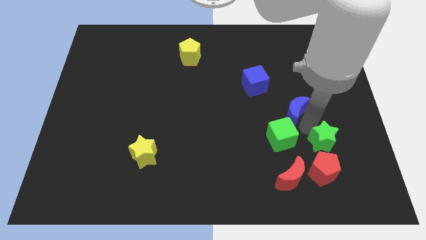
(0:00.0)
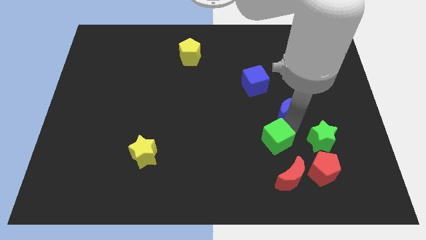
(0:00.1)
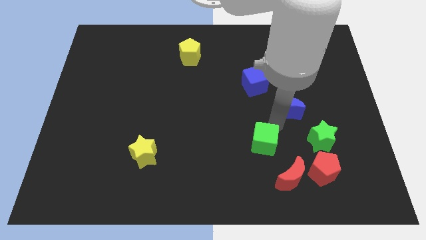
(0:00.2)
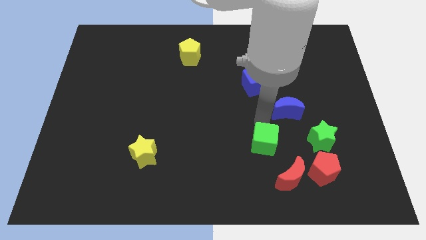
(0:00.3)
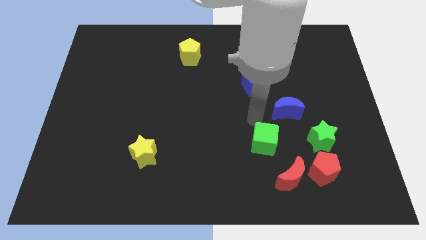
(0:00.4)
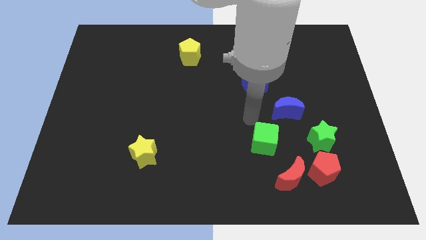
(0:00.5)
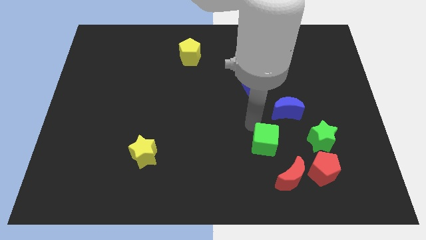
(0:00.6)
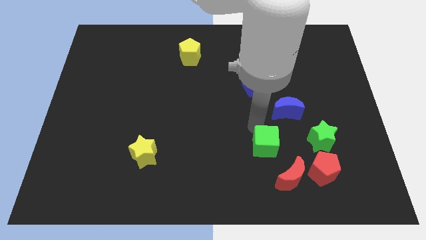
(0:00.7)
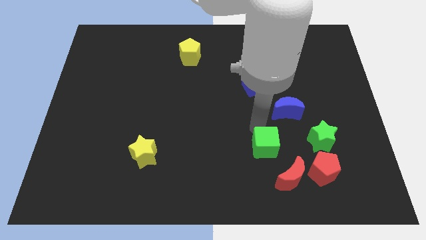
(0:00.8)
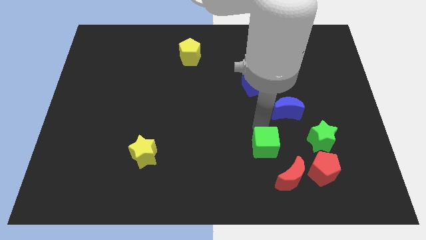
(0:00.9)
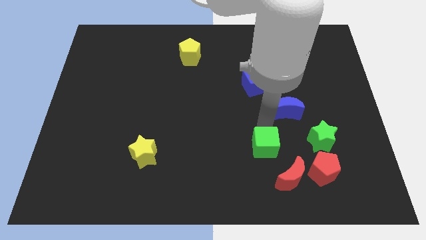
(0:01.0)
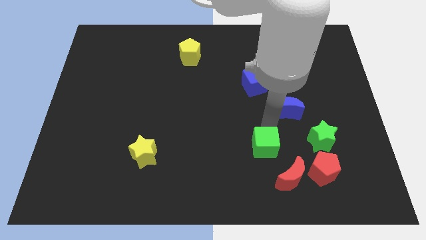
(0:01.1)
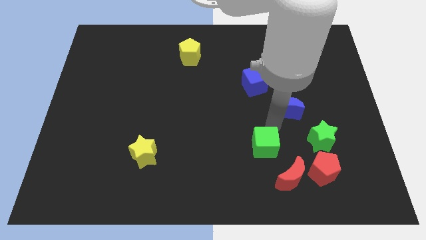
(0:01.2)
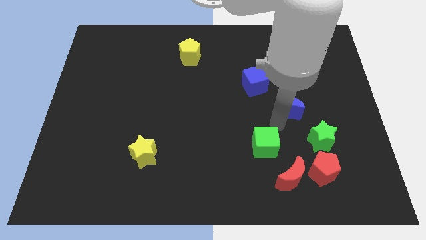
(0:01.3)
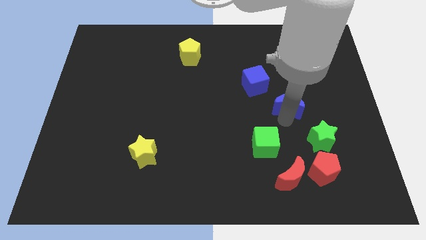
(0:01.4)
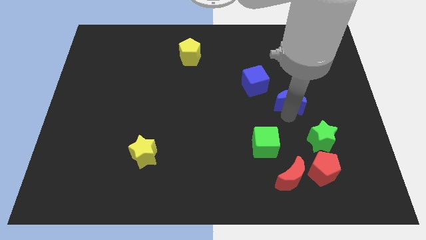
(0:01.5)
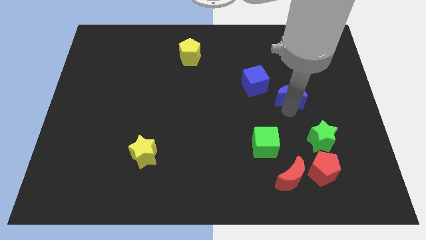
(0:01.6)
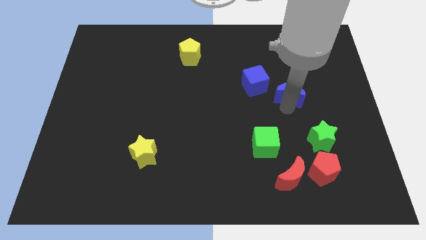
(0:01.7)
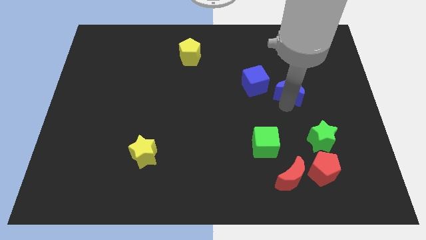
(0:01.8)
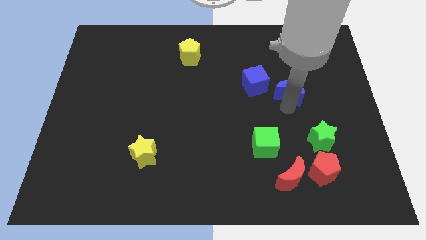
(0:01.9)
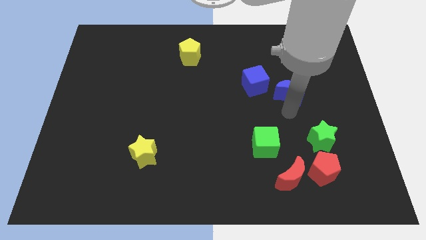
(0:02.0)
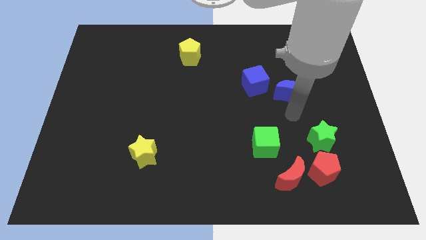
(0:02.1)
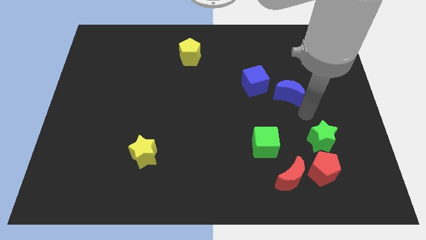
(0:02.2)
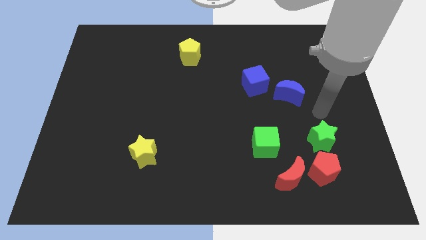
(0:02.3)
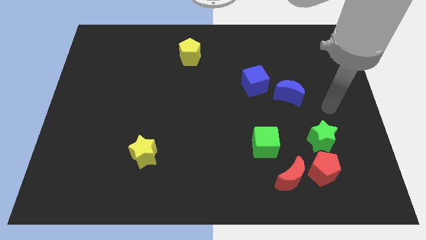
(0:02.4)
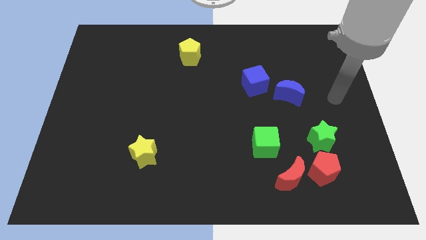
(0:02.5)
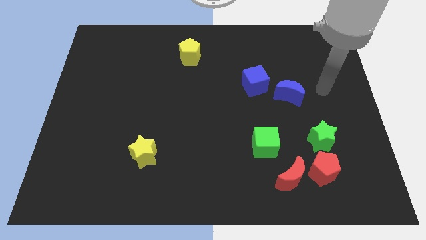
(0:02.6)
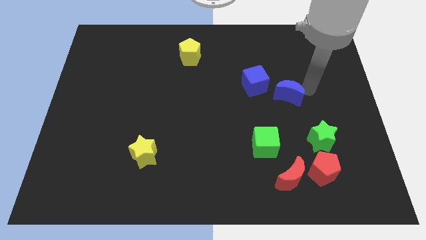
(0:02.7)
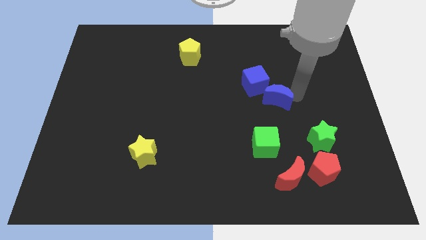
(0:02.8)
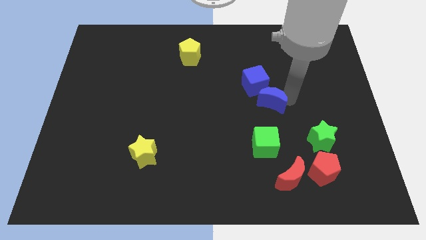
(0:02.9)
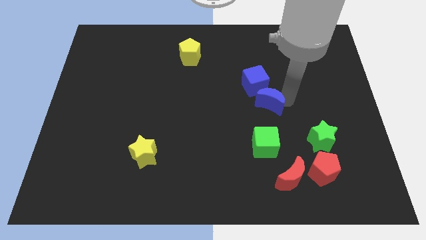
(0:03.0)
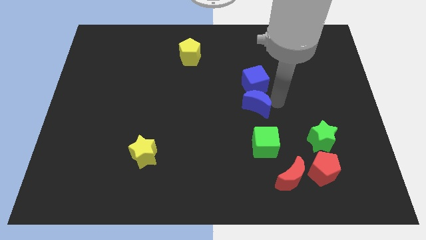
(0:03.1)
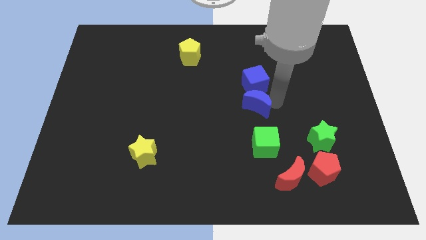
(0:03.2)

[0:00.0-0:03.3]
put the blue crescent between the blue cube and green cube

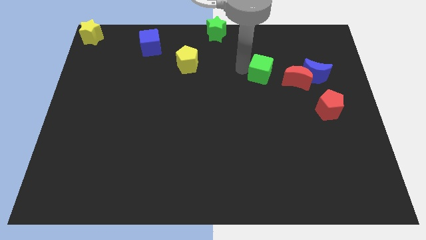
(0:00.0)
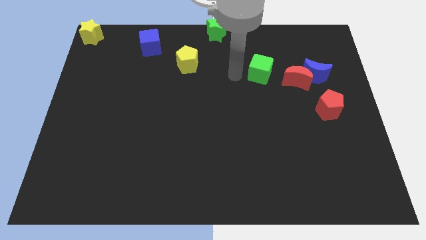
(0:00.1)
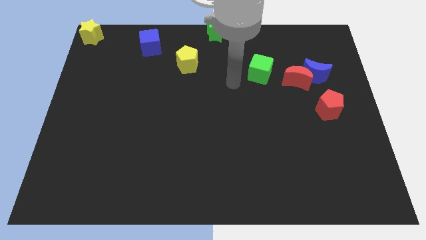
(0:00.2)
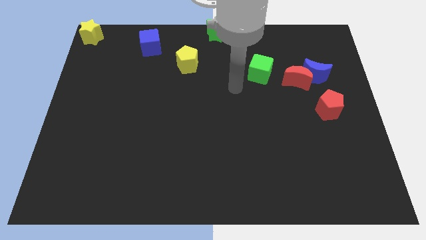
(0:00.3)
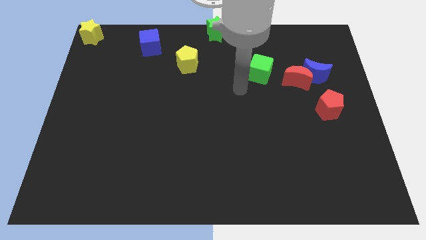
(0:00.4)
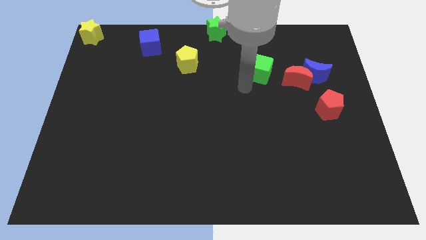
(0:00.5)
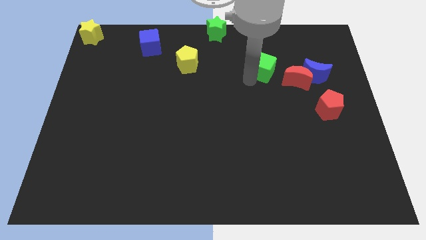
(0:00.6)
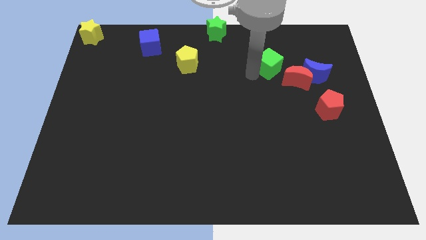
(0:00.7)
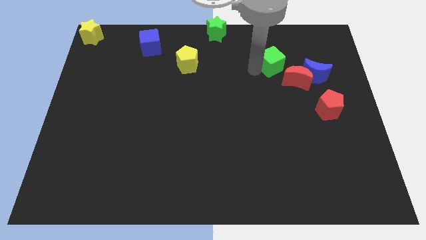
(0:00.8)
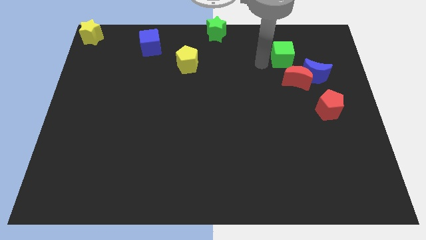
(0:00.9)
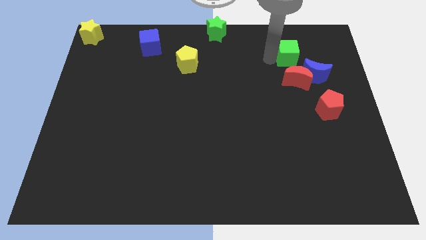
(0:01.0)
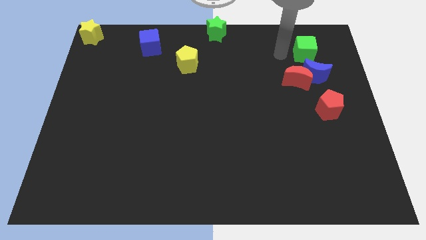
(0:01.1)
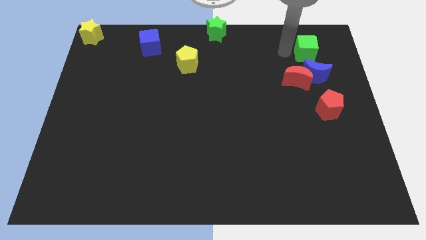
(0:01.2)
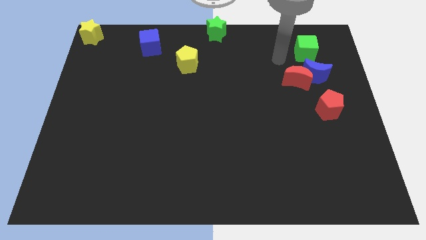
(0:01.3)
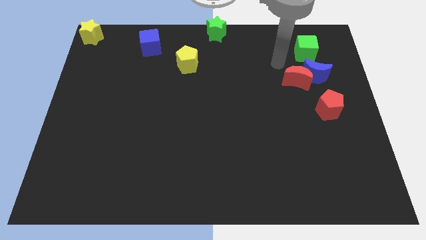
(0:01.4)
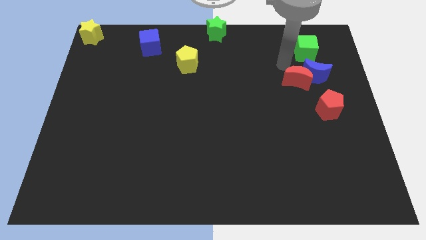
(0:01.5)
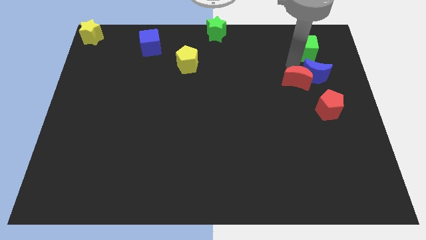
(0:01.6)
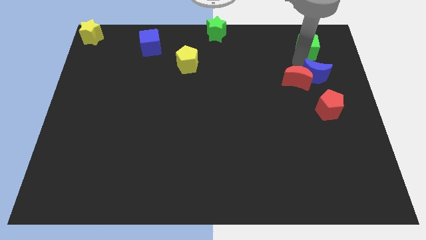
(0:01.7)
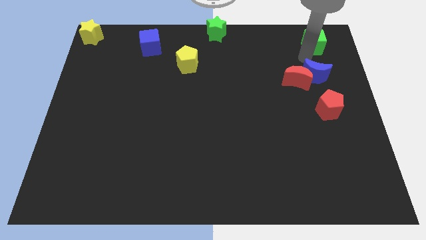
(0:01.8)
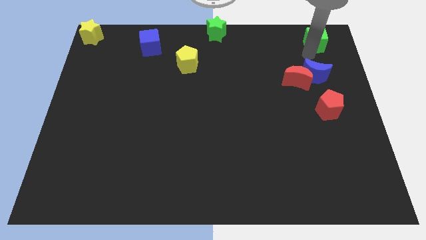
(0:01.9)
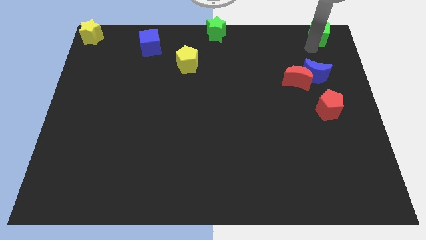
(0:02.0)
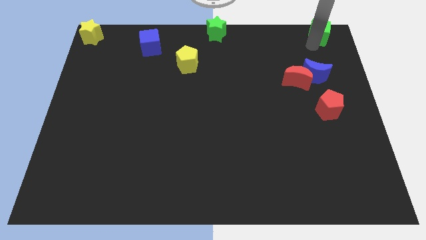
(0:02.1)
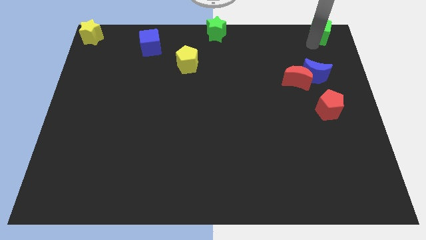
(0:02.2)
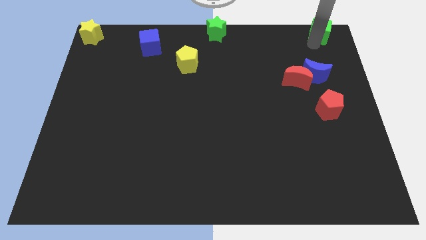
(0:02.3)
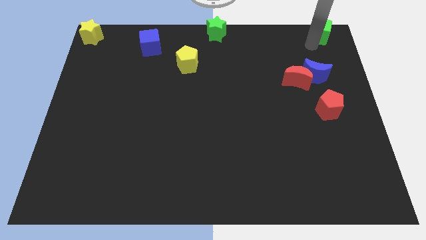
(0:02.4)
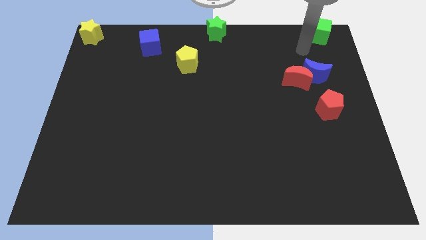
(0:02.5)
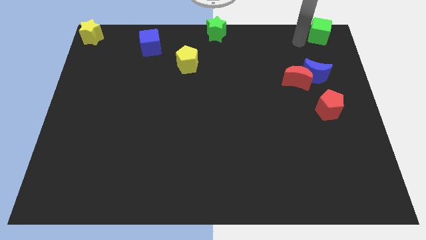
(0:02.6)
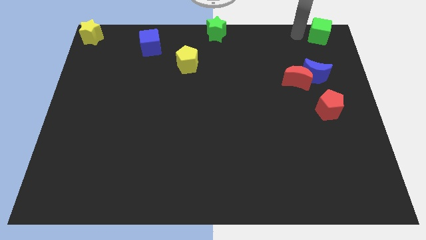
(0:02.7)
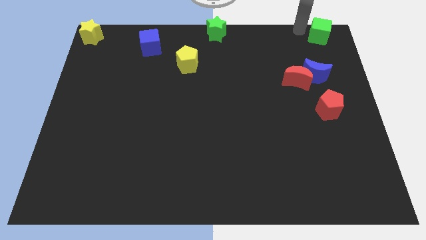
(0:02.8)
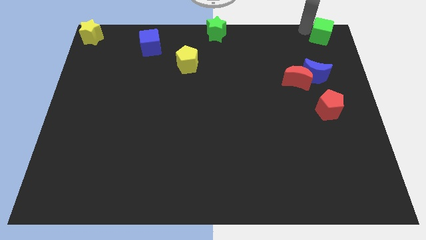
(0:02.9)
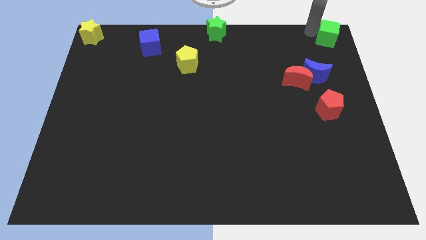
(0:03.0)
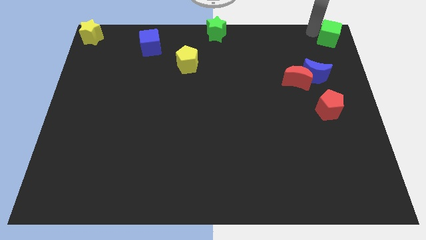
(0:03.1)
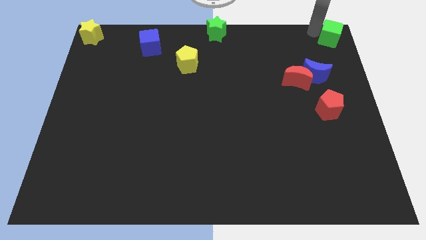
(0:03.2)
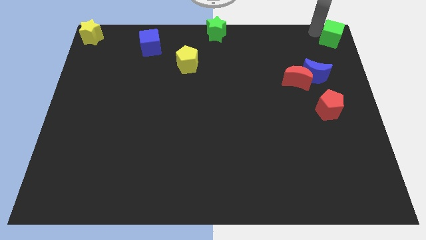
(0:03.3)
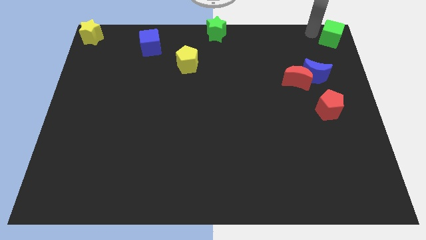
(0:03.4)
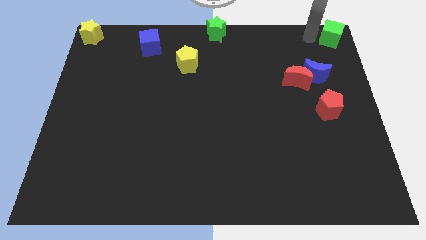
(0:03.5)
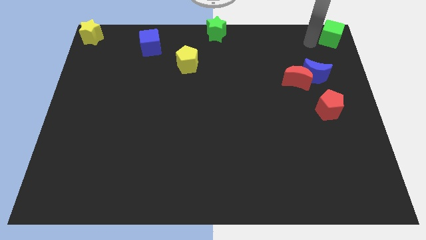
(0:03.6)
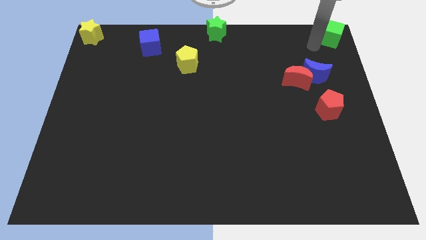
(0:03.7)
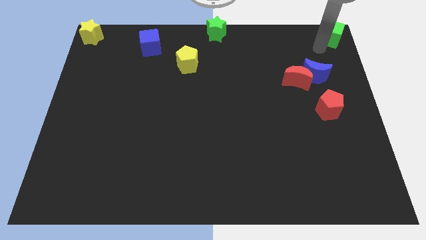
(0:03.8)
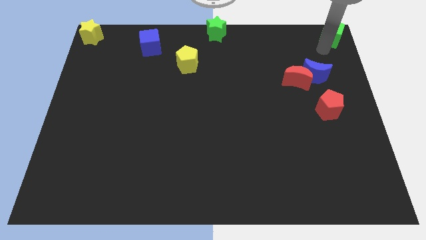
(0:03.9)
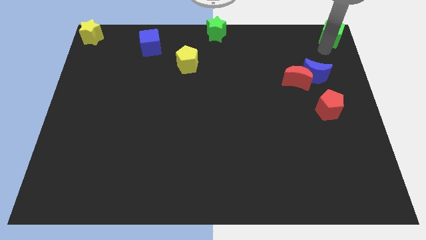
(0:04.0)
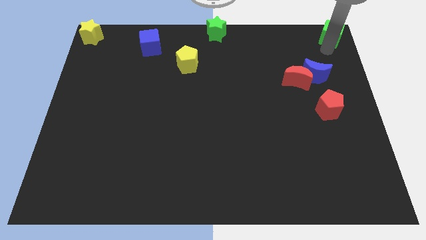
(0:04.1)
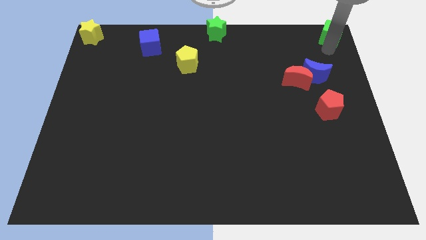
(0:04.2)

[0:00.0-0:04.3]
push green cube to the right top corner

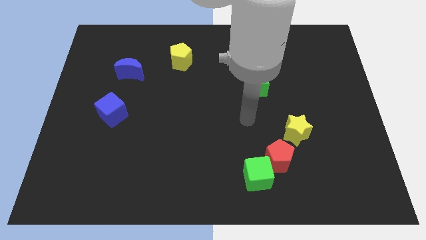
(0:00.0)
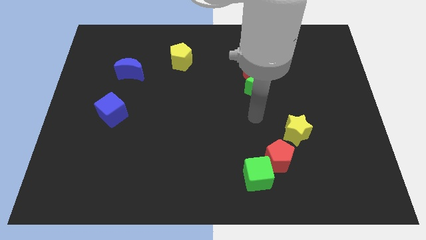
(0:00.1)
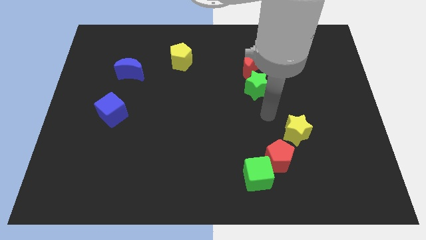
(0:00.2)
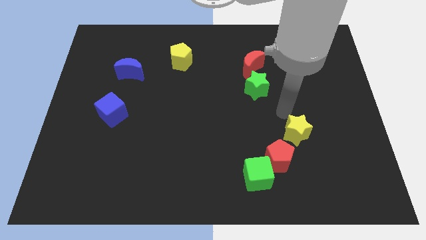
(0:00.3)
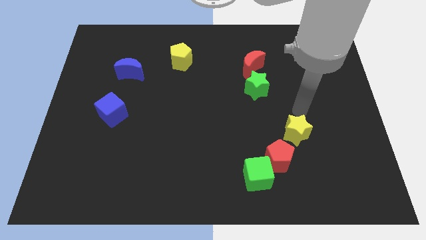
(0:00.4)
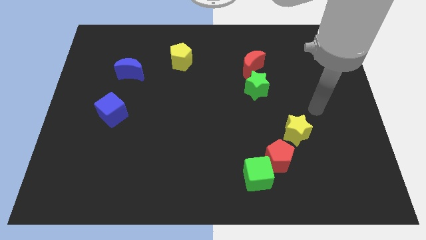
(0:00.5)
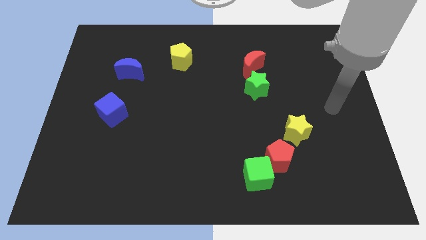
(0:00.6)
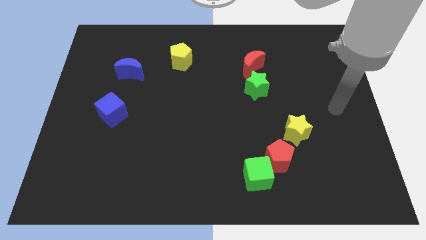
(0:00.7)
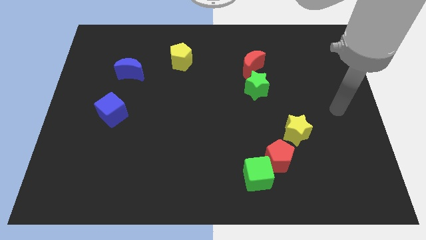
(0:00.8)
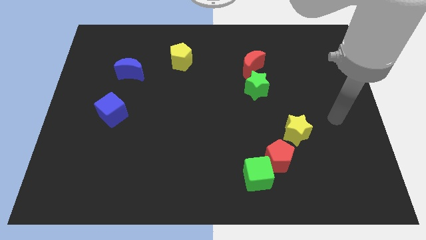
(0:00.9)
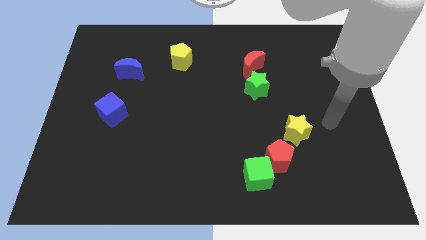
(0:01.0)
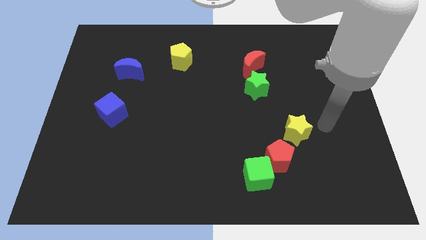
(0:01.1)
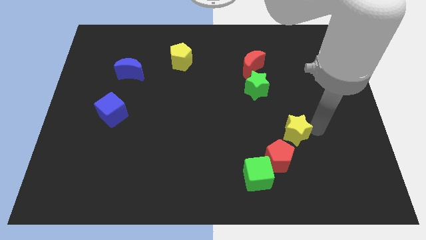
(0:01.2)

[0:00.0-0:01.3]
move your arm towards the yellow star
